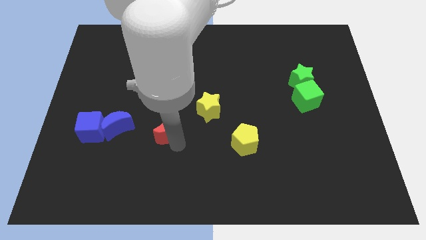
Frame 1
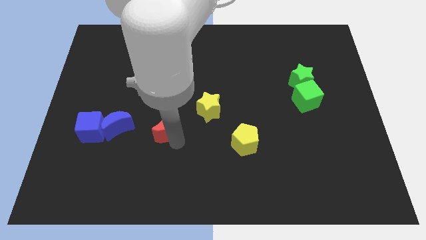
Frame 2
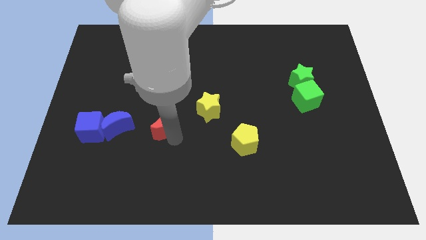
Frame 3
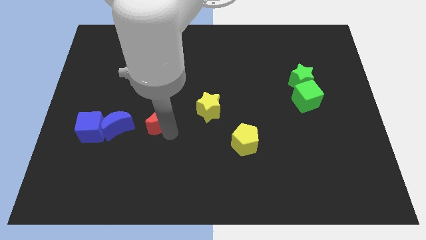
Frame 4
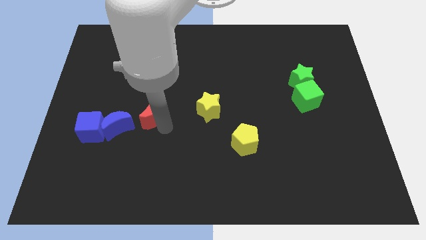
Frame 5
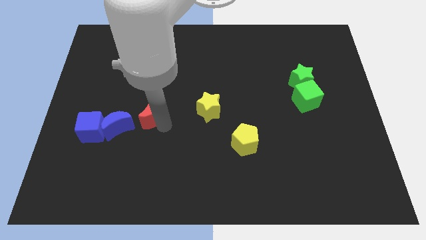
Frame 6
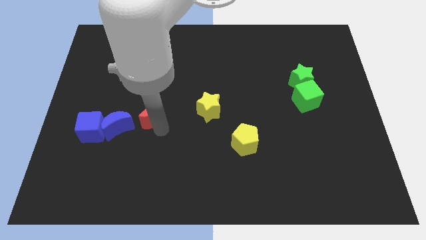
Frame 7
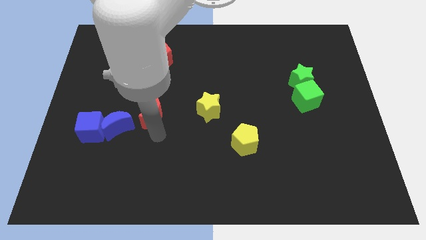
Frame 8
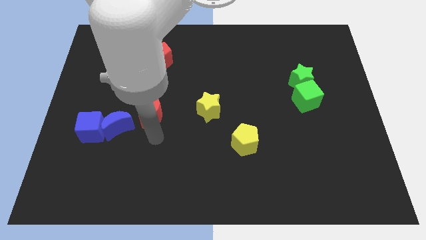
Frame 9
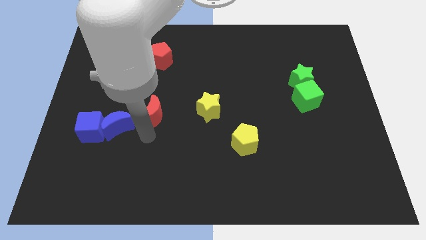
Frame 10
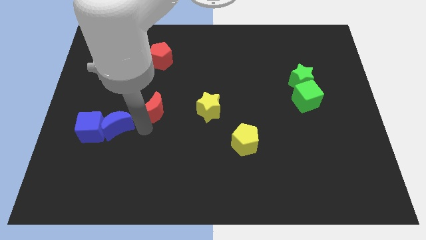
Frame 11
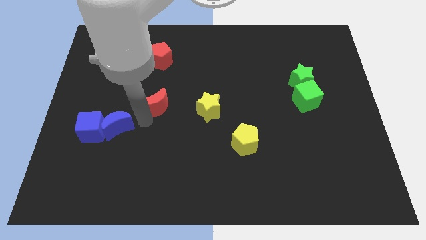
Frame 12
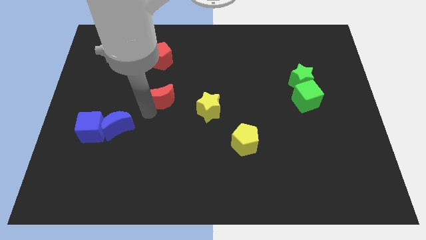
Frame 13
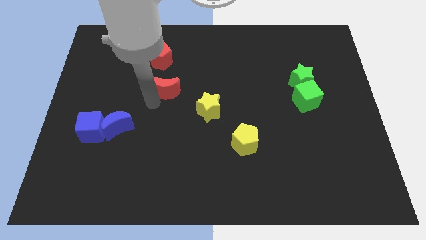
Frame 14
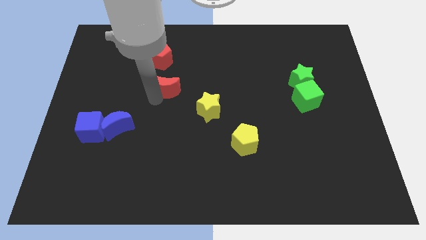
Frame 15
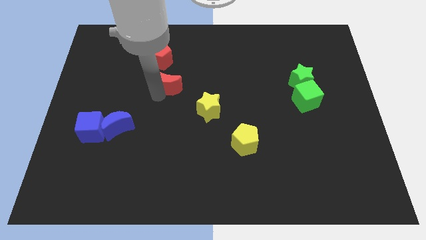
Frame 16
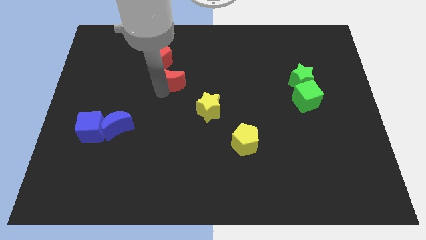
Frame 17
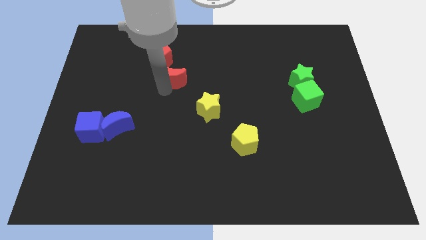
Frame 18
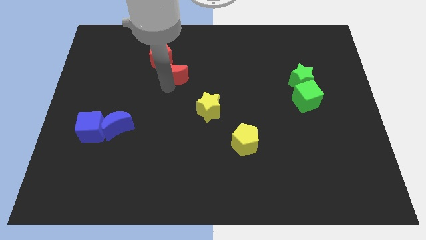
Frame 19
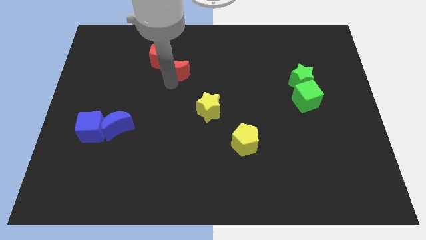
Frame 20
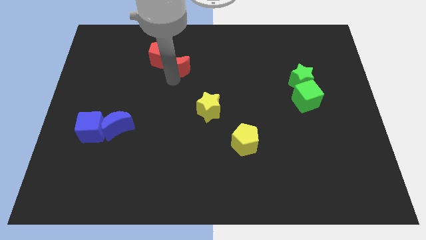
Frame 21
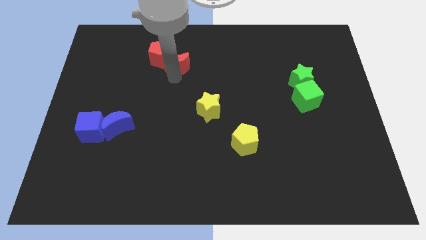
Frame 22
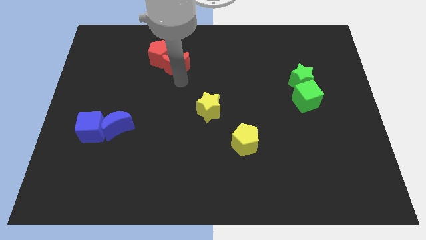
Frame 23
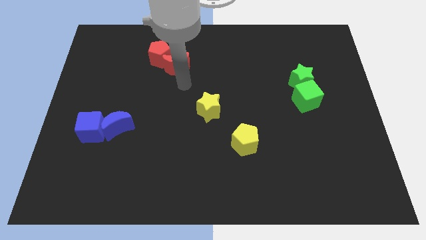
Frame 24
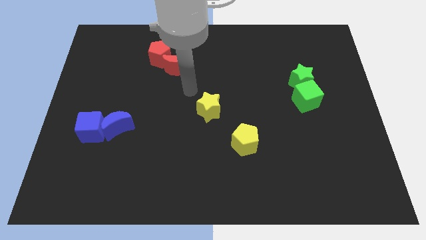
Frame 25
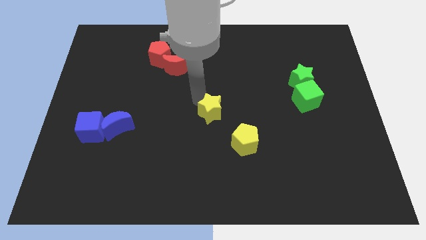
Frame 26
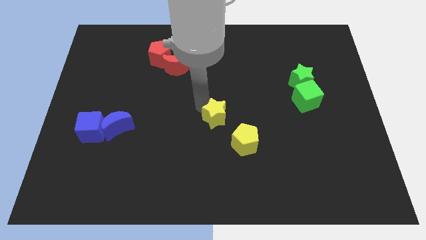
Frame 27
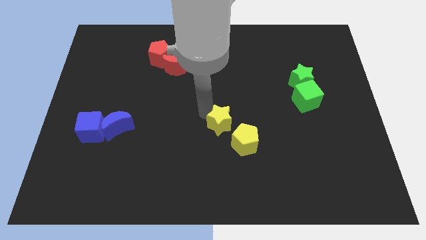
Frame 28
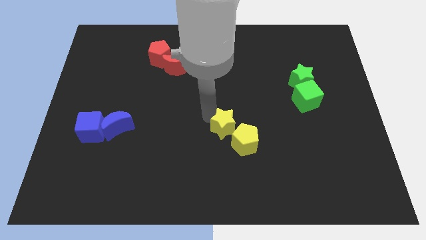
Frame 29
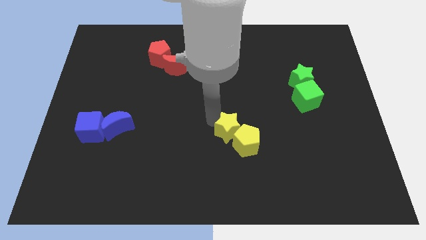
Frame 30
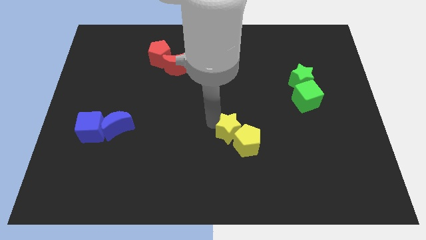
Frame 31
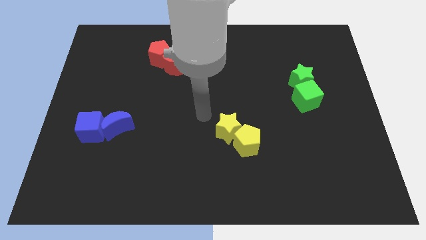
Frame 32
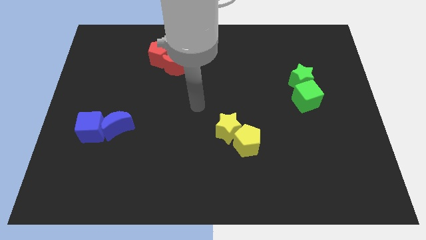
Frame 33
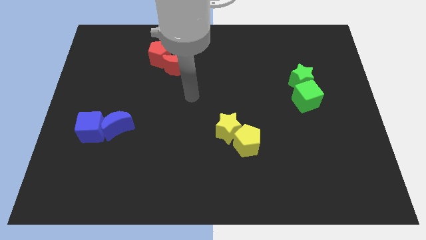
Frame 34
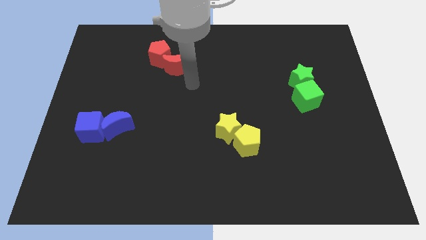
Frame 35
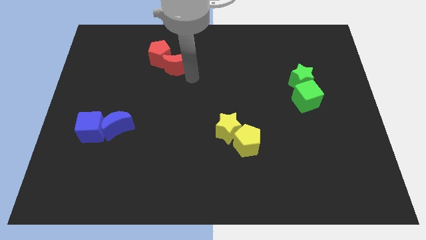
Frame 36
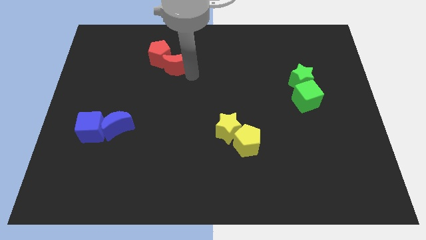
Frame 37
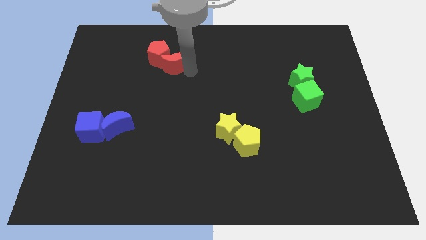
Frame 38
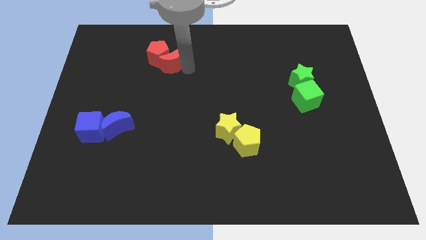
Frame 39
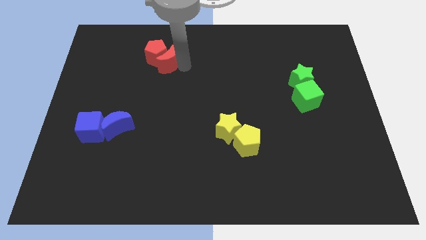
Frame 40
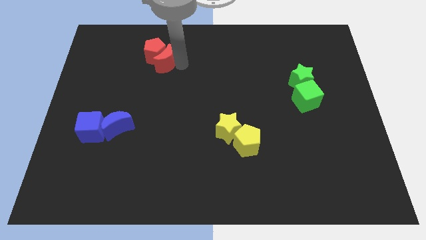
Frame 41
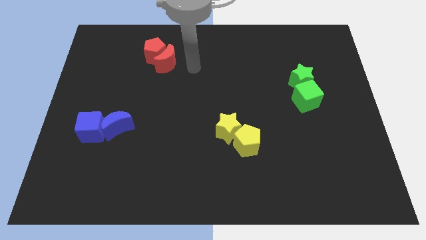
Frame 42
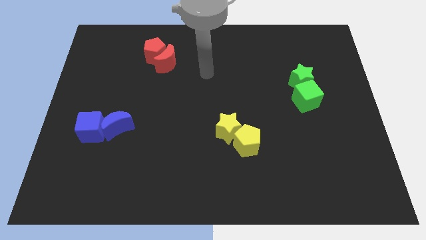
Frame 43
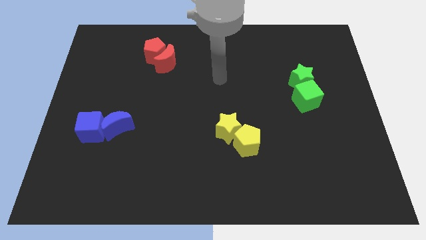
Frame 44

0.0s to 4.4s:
make a pair of blocks blocks with red pentagon and crescent and yellow star and pentagon

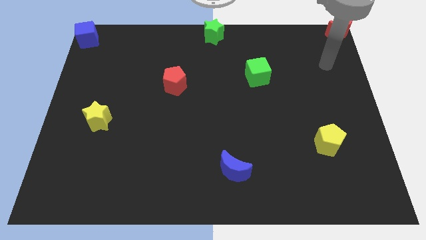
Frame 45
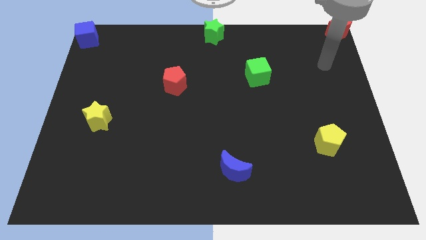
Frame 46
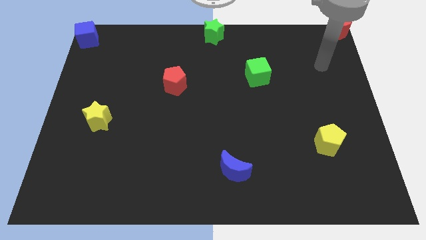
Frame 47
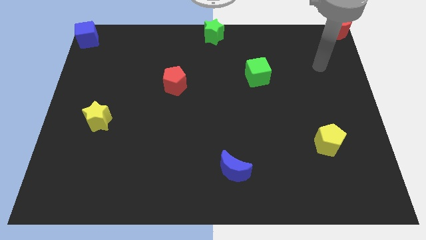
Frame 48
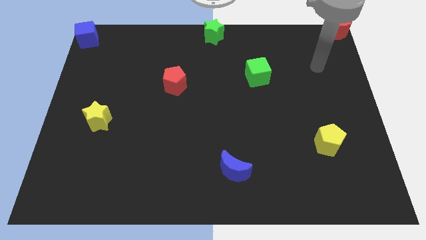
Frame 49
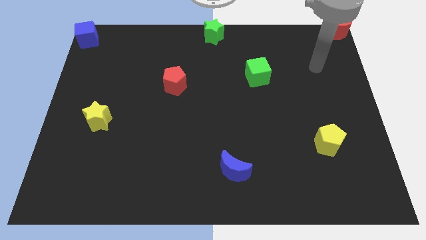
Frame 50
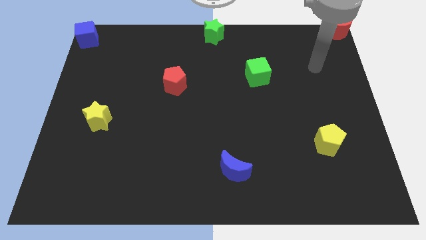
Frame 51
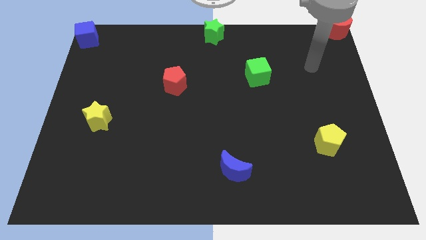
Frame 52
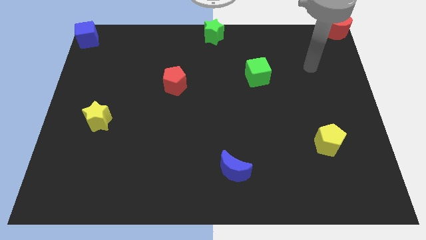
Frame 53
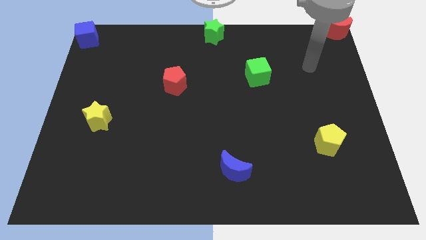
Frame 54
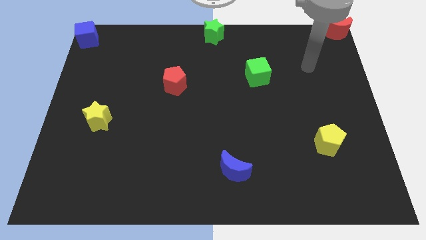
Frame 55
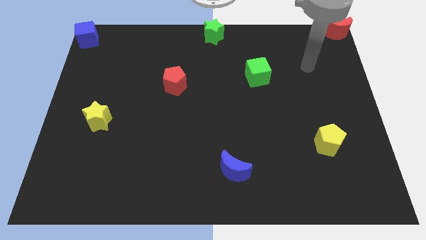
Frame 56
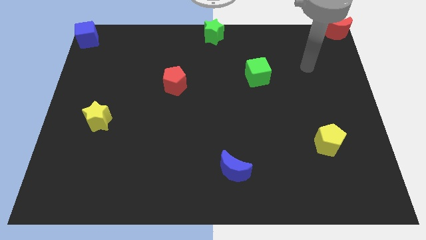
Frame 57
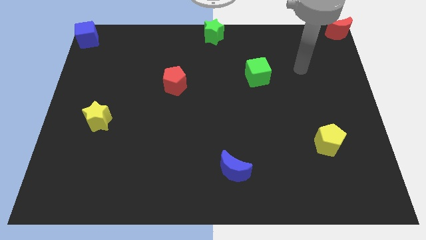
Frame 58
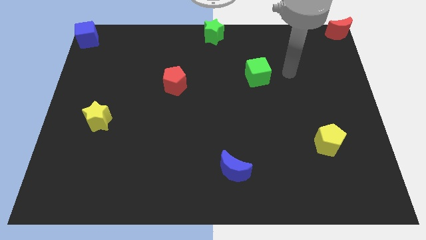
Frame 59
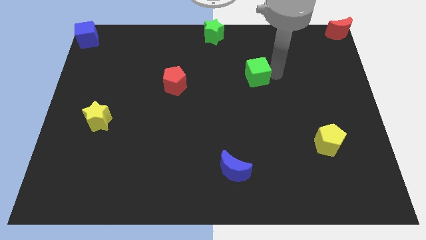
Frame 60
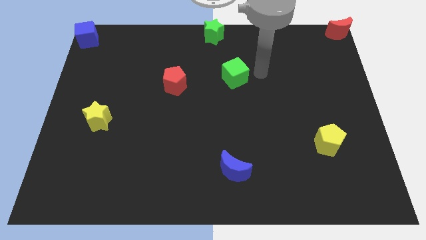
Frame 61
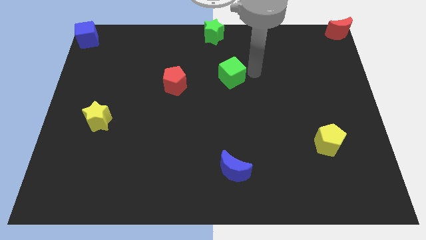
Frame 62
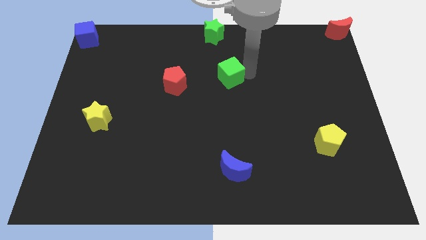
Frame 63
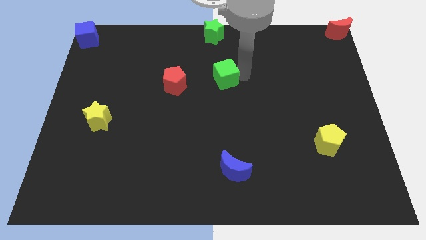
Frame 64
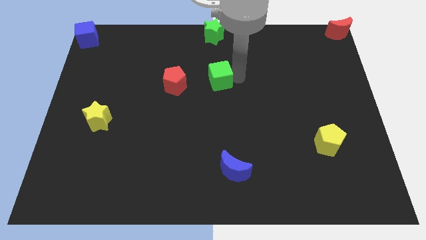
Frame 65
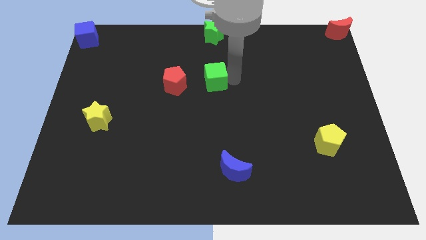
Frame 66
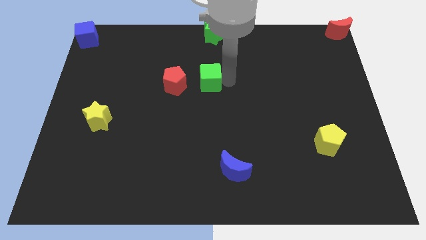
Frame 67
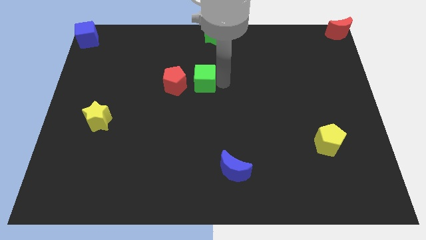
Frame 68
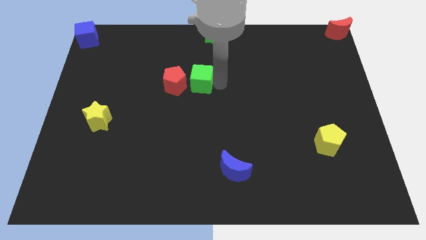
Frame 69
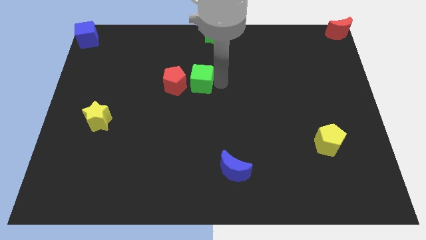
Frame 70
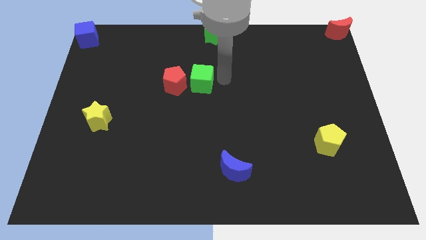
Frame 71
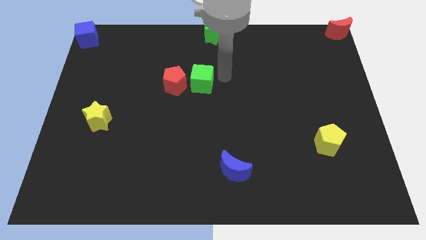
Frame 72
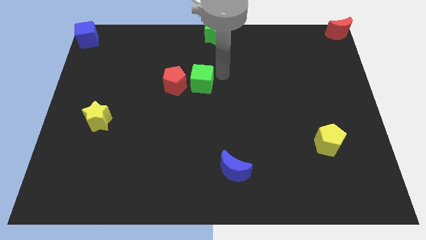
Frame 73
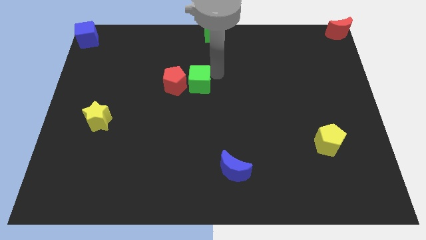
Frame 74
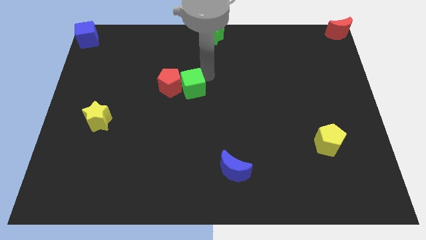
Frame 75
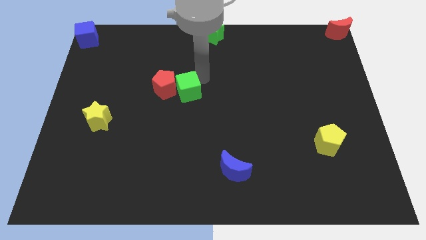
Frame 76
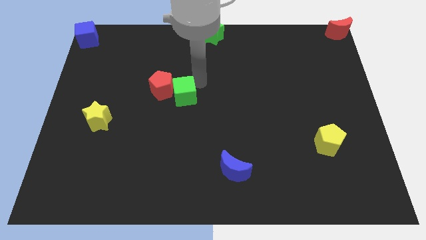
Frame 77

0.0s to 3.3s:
move green cube into red pentagon

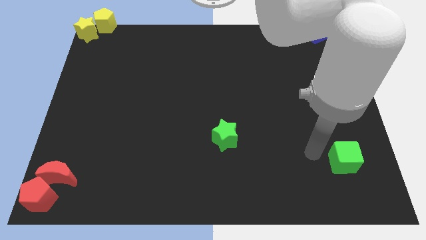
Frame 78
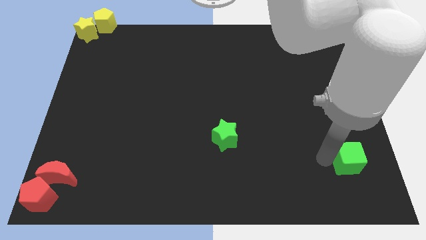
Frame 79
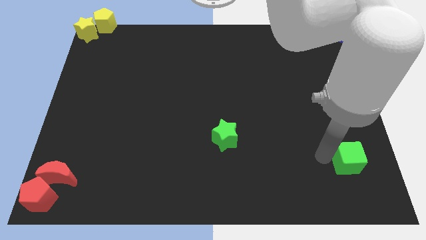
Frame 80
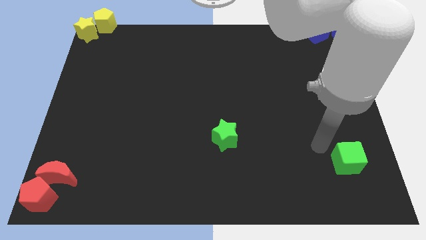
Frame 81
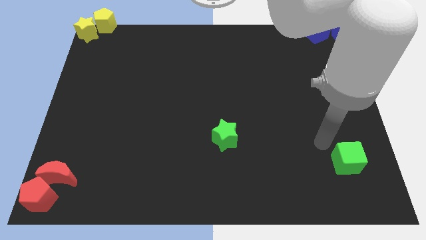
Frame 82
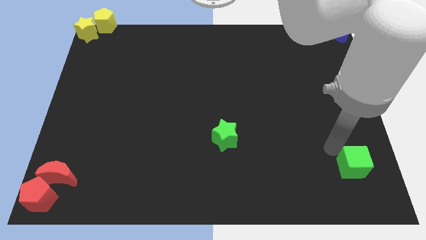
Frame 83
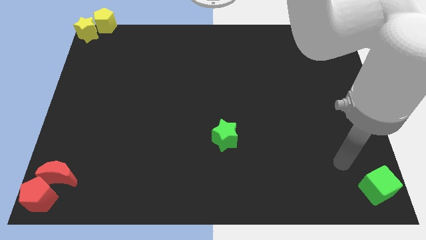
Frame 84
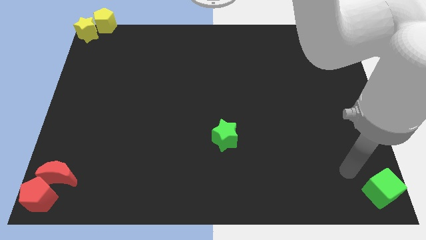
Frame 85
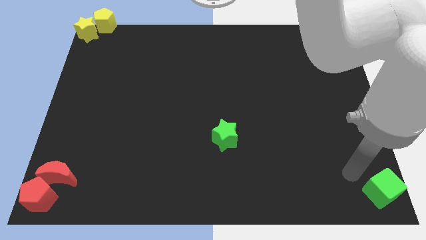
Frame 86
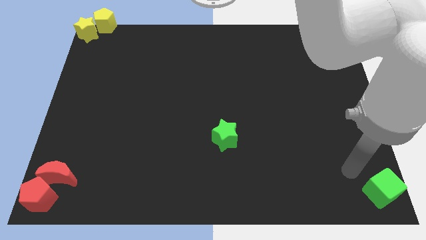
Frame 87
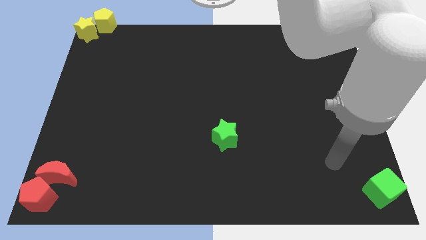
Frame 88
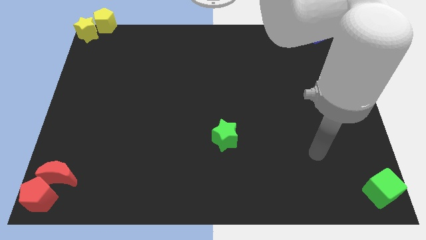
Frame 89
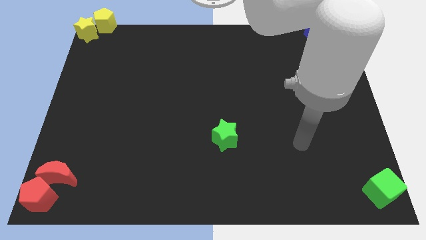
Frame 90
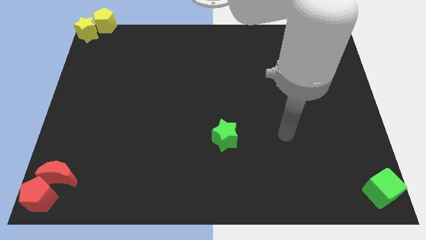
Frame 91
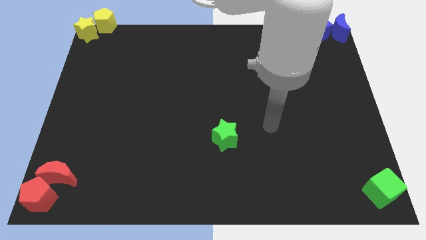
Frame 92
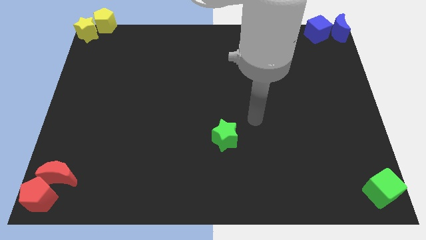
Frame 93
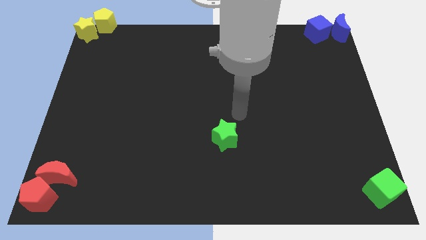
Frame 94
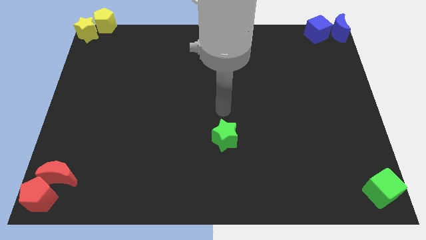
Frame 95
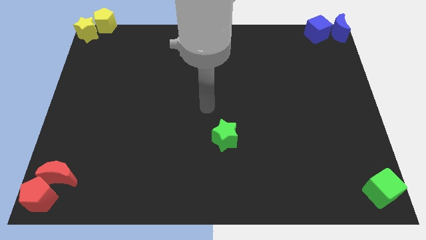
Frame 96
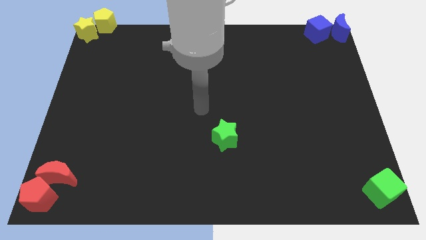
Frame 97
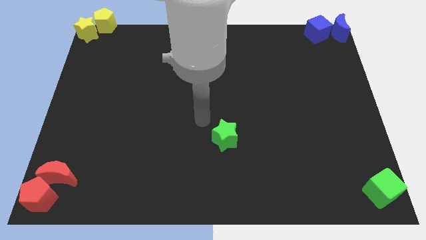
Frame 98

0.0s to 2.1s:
move the green cube towards the bottom right corner
